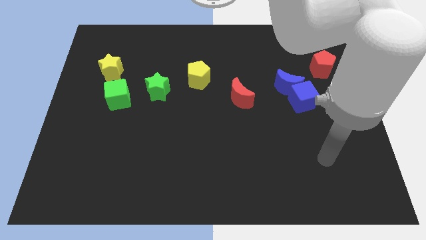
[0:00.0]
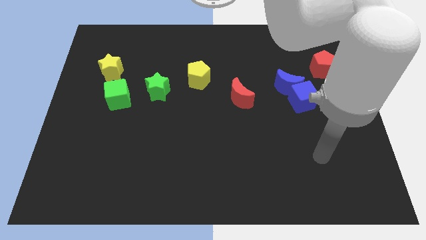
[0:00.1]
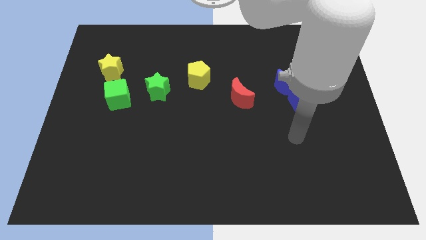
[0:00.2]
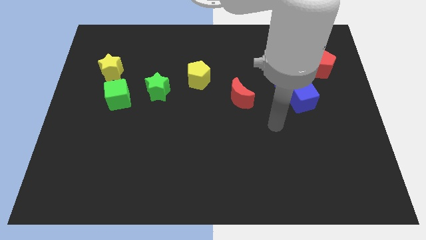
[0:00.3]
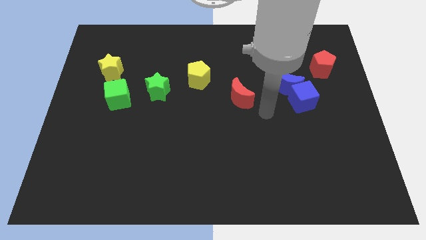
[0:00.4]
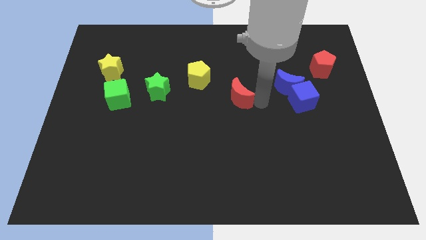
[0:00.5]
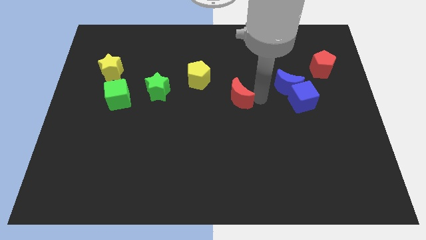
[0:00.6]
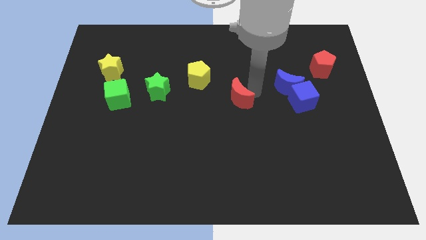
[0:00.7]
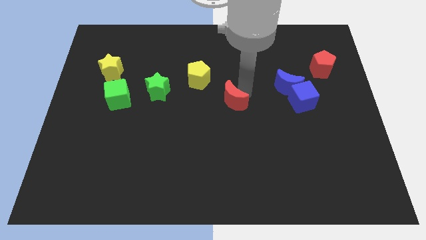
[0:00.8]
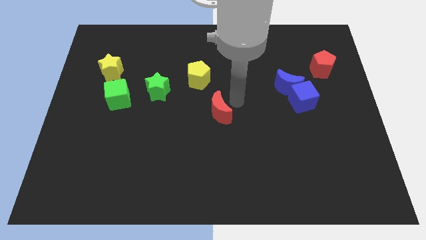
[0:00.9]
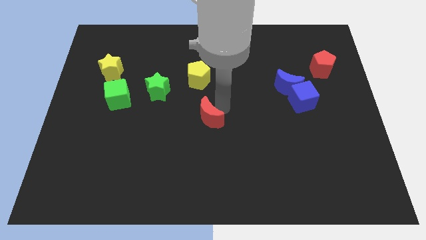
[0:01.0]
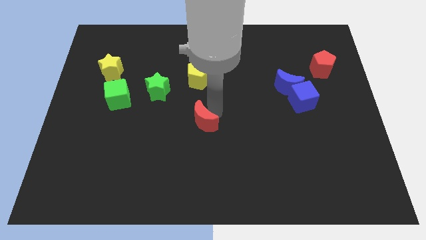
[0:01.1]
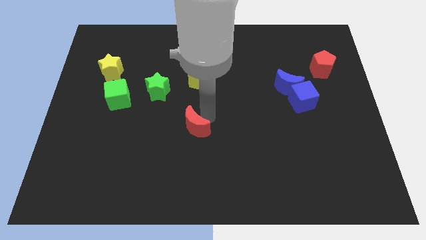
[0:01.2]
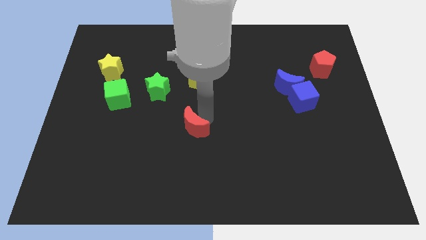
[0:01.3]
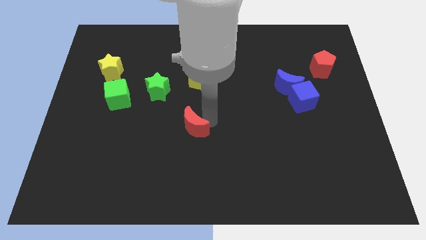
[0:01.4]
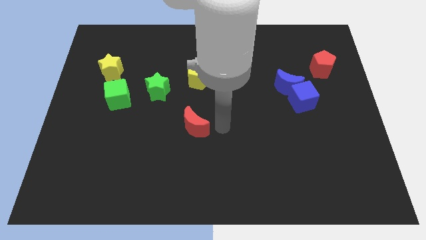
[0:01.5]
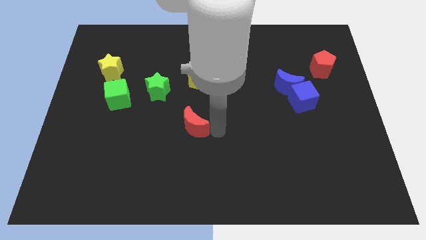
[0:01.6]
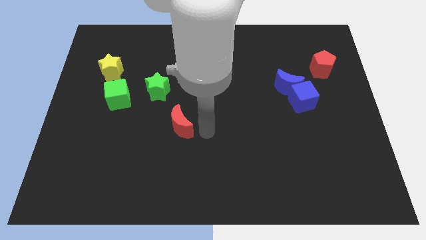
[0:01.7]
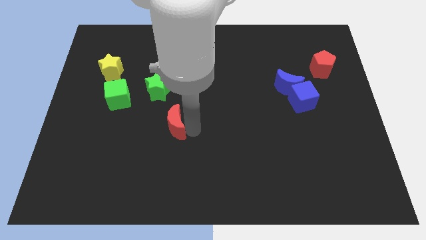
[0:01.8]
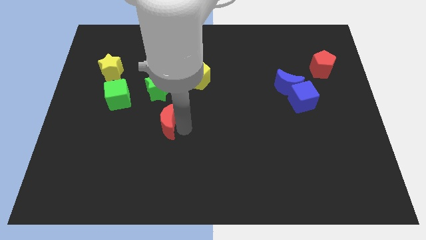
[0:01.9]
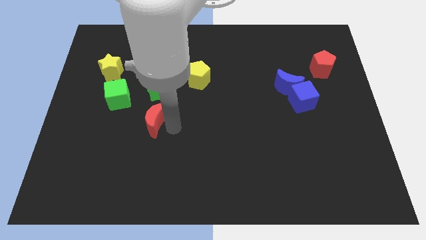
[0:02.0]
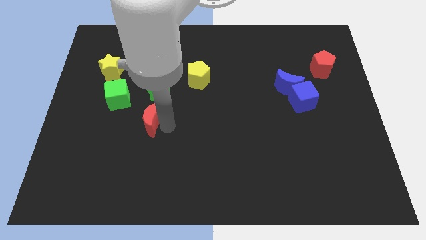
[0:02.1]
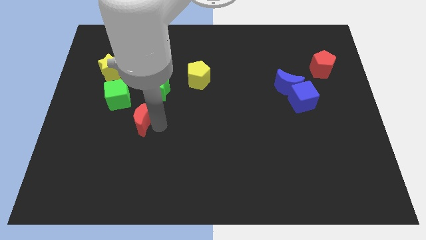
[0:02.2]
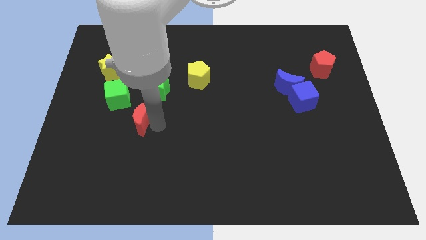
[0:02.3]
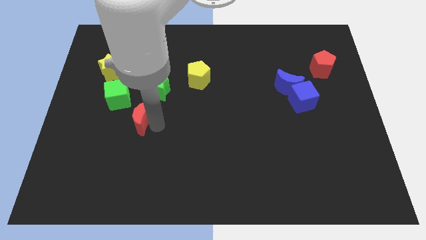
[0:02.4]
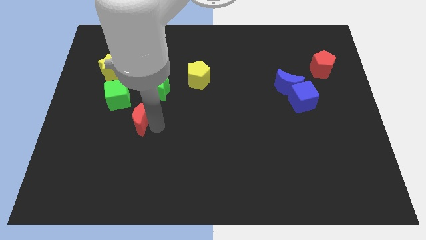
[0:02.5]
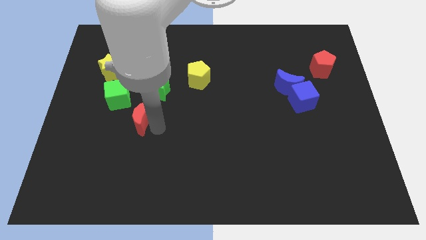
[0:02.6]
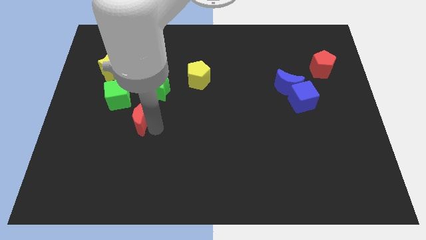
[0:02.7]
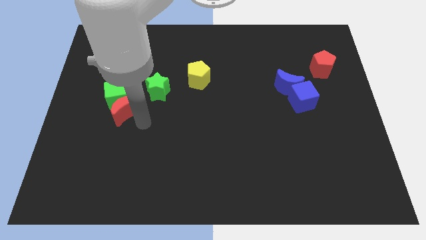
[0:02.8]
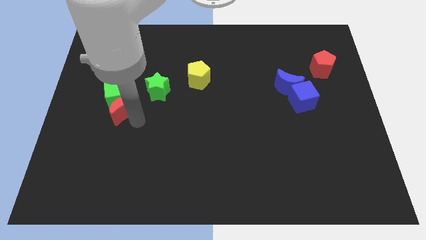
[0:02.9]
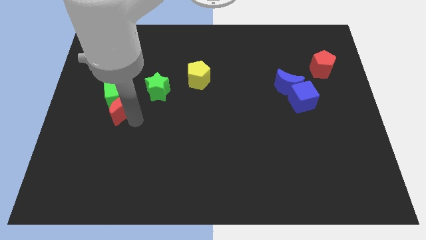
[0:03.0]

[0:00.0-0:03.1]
put the red moon close to the green cube

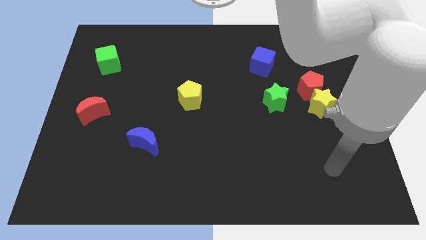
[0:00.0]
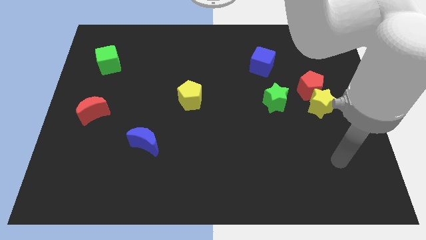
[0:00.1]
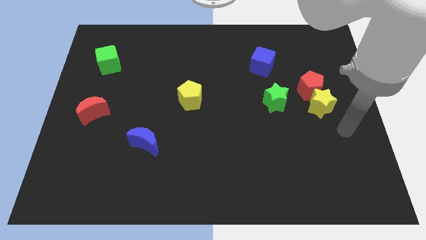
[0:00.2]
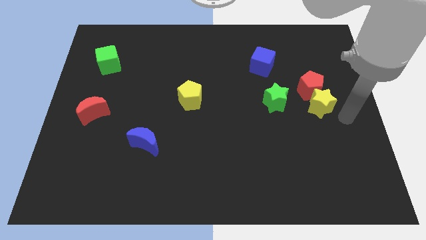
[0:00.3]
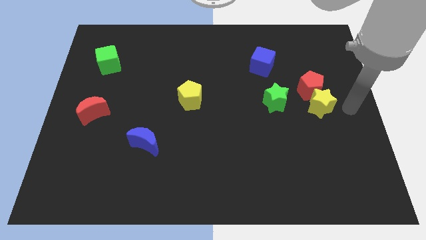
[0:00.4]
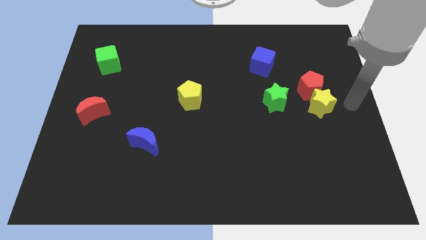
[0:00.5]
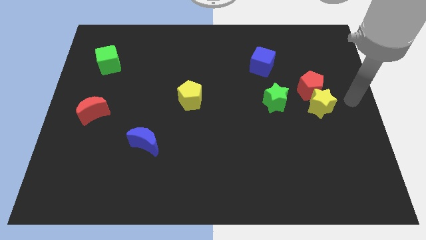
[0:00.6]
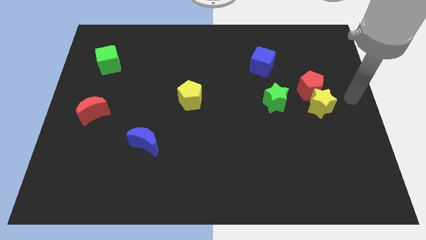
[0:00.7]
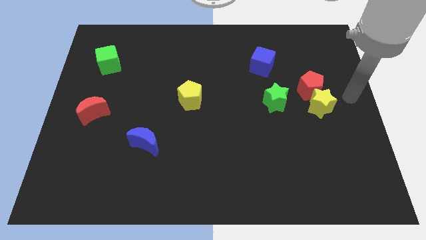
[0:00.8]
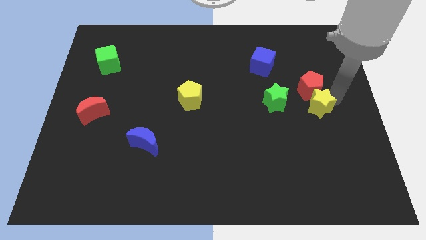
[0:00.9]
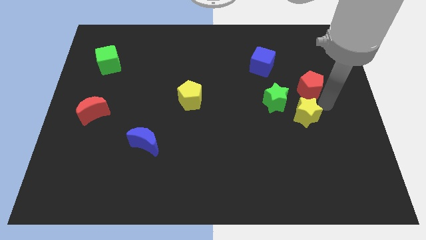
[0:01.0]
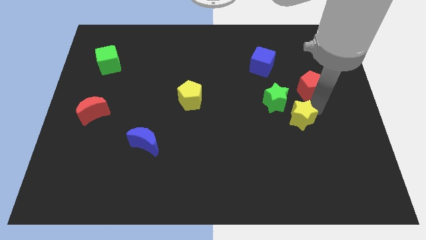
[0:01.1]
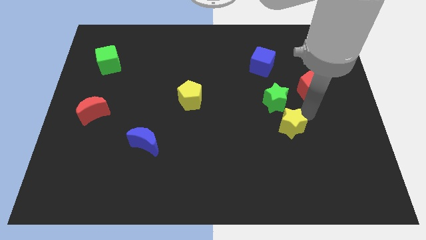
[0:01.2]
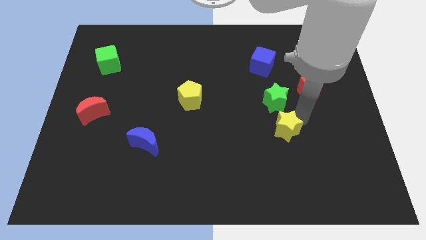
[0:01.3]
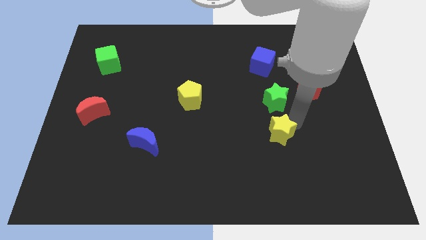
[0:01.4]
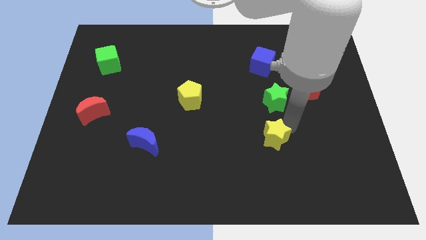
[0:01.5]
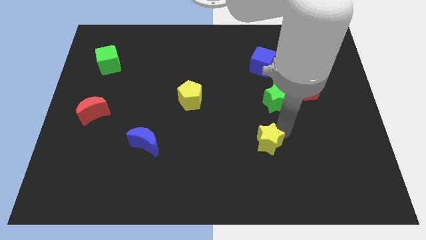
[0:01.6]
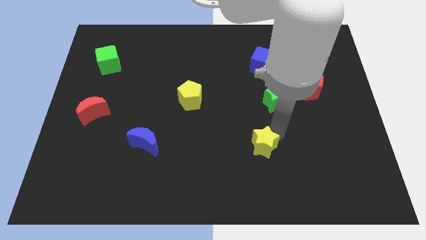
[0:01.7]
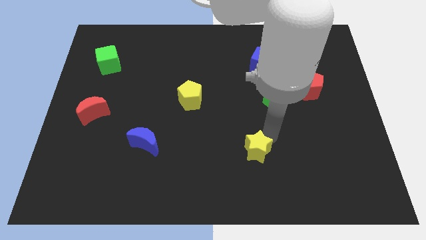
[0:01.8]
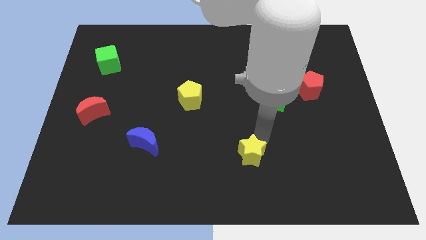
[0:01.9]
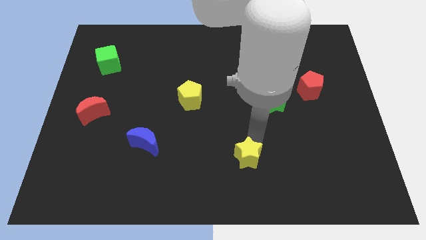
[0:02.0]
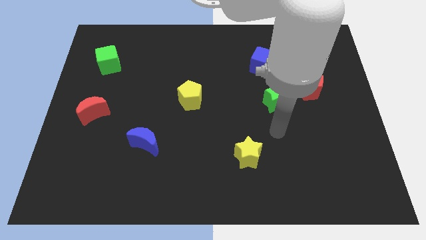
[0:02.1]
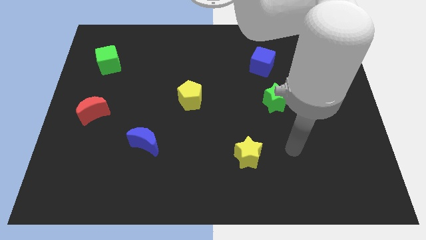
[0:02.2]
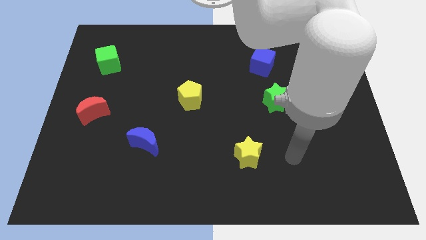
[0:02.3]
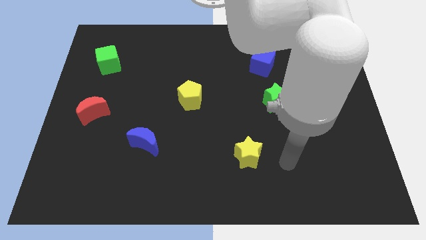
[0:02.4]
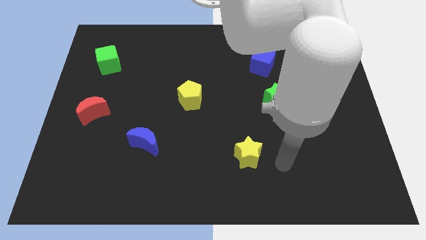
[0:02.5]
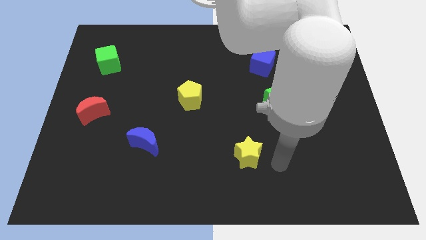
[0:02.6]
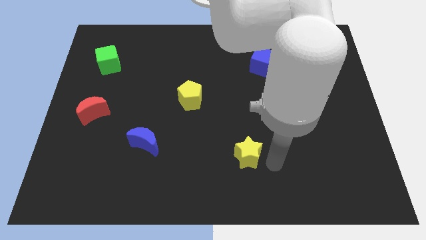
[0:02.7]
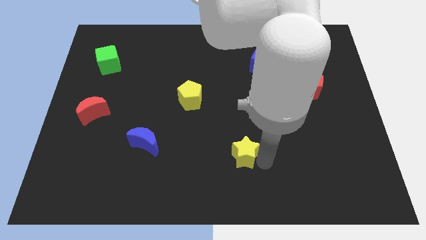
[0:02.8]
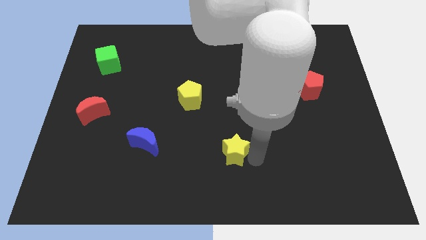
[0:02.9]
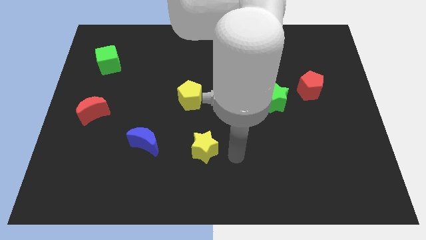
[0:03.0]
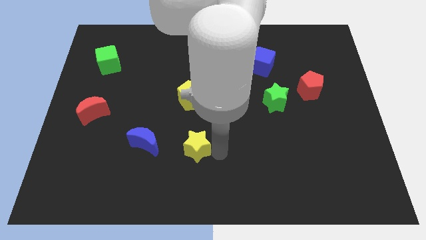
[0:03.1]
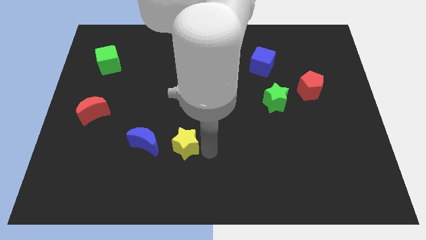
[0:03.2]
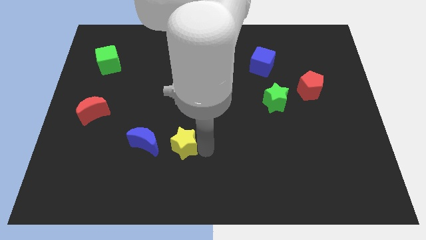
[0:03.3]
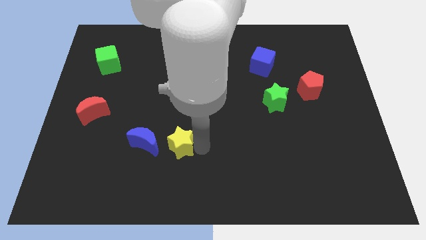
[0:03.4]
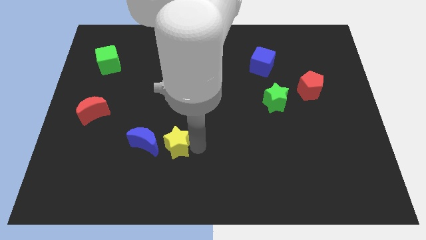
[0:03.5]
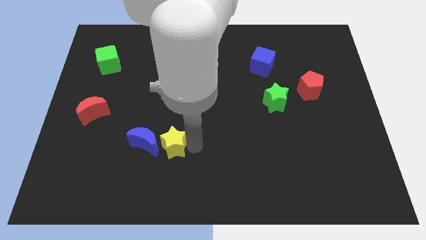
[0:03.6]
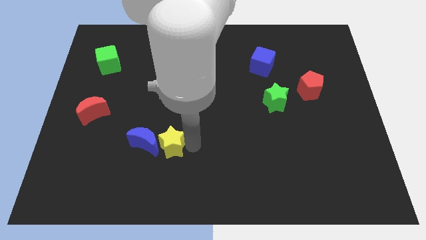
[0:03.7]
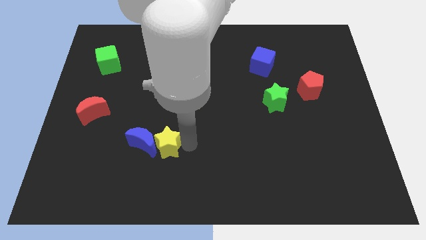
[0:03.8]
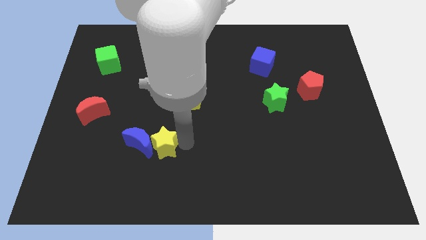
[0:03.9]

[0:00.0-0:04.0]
put the yellow star to the blue moon

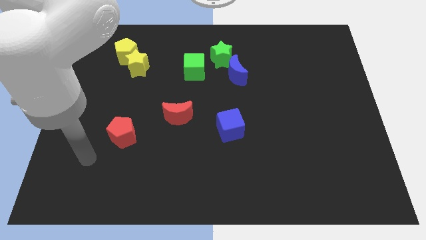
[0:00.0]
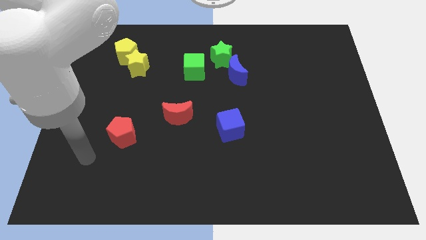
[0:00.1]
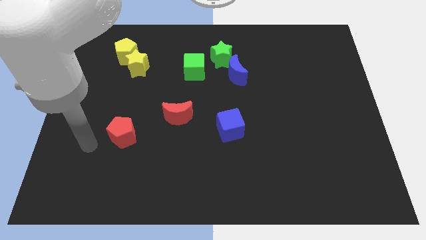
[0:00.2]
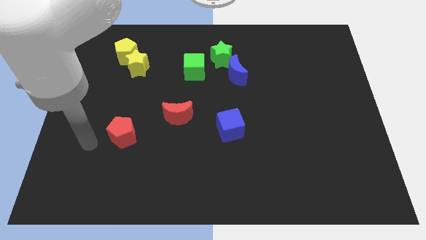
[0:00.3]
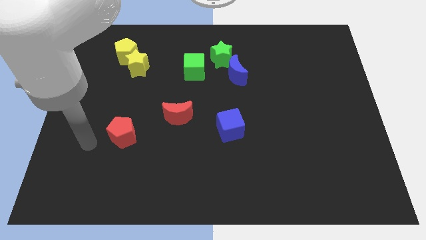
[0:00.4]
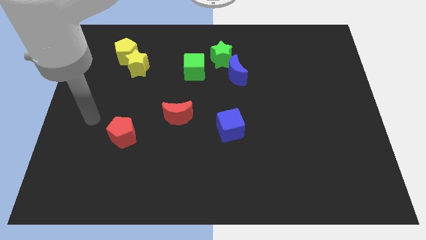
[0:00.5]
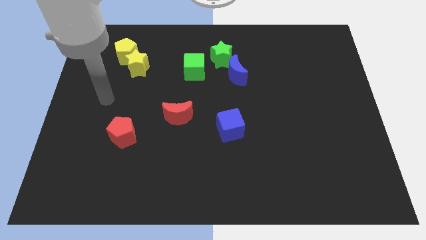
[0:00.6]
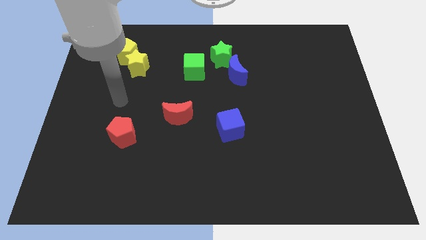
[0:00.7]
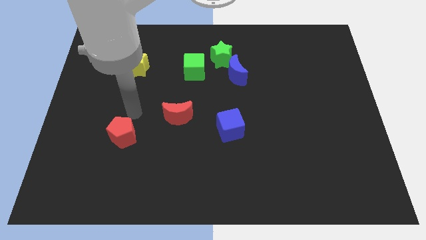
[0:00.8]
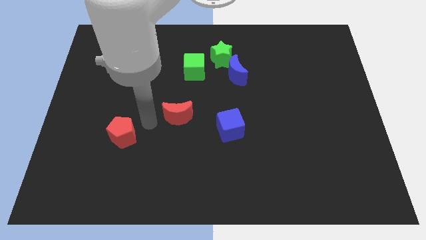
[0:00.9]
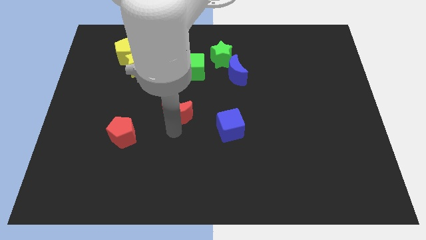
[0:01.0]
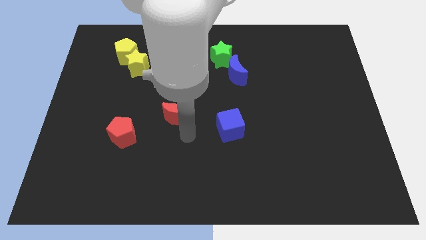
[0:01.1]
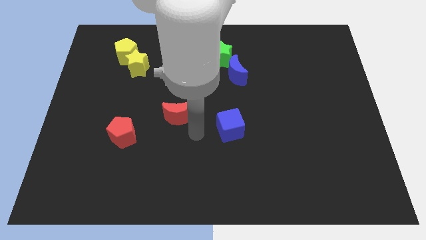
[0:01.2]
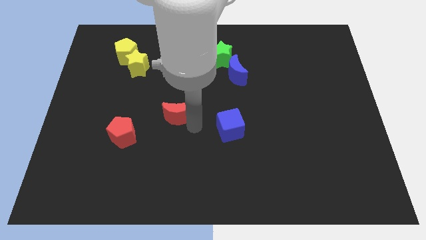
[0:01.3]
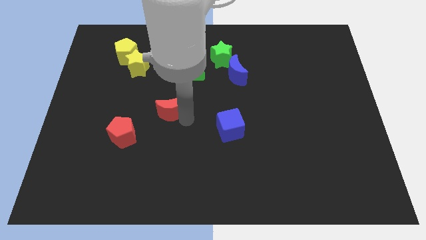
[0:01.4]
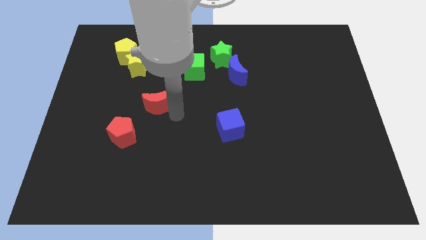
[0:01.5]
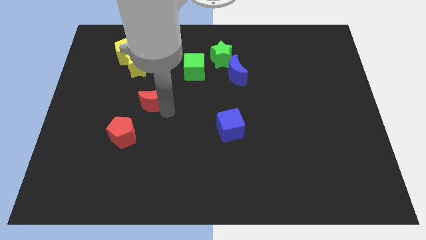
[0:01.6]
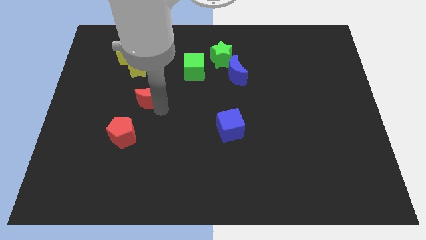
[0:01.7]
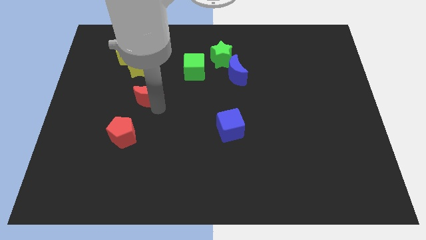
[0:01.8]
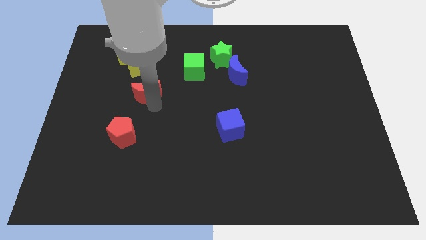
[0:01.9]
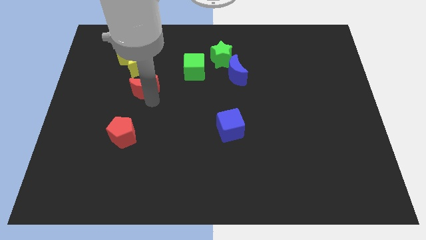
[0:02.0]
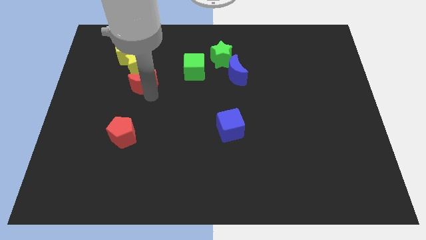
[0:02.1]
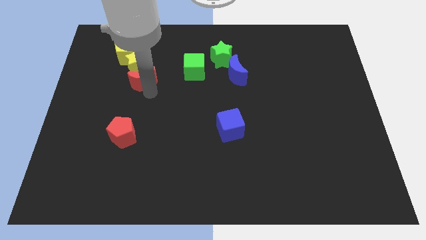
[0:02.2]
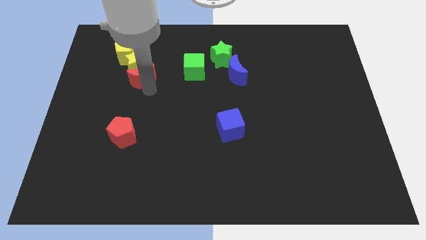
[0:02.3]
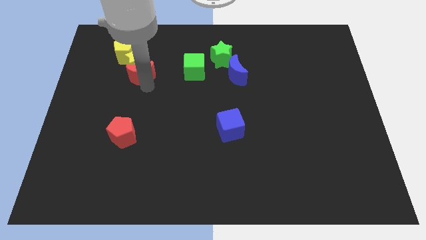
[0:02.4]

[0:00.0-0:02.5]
move the red moon next to the yellow star
